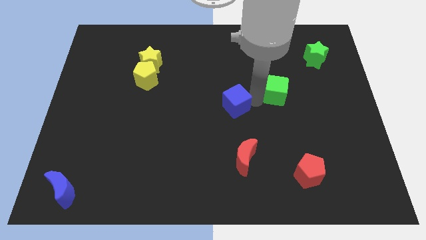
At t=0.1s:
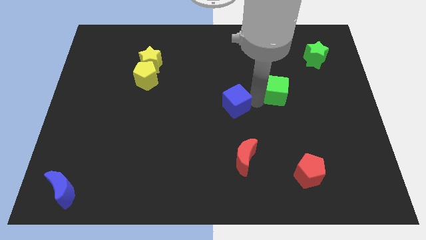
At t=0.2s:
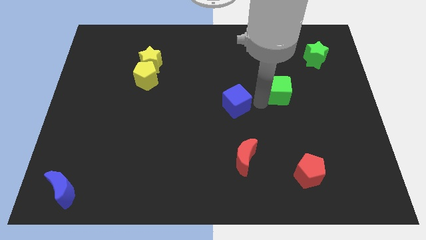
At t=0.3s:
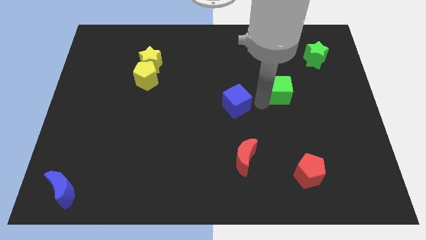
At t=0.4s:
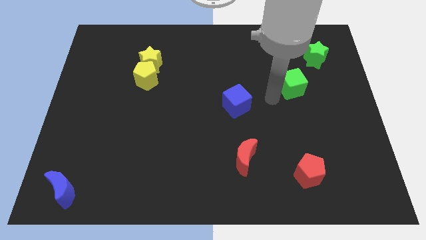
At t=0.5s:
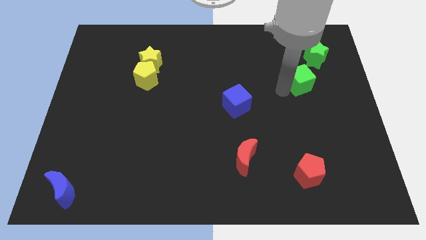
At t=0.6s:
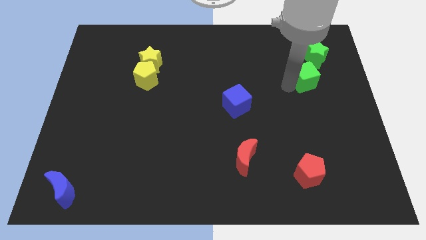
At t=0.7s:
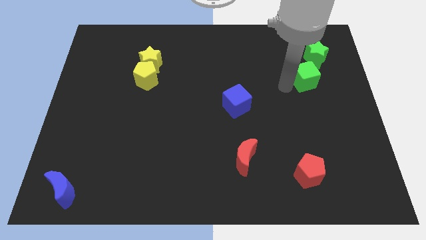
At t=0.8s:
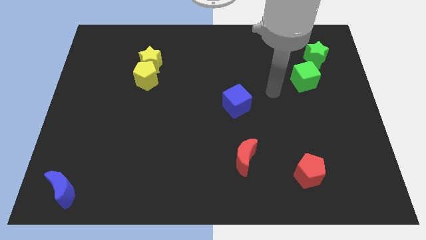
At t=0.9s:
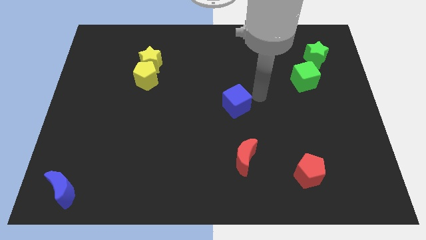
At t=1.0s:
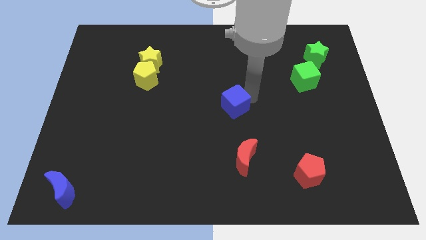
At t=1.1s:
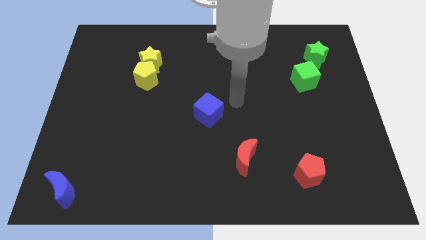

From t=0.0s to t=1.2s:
place green cube to the bottom left of the green star

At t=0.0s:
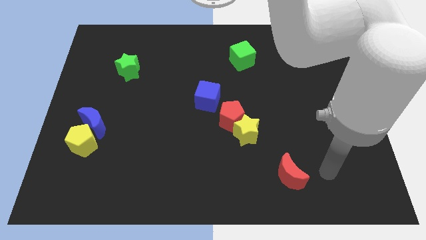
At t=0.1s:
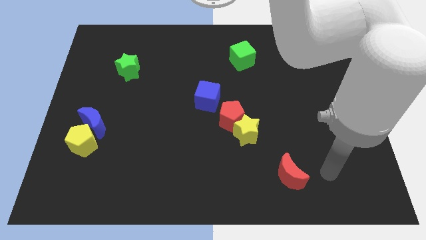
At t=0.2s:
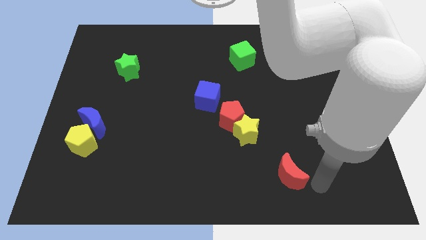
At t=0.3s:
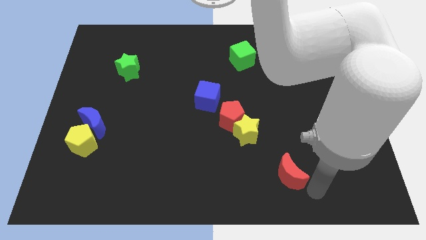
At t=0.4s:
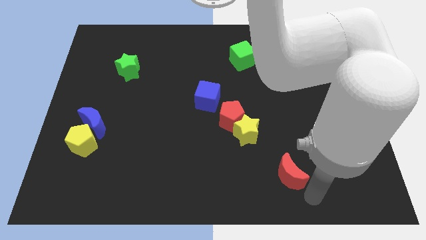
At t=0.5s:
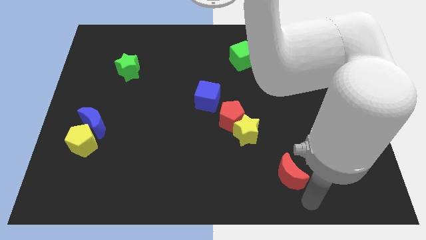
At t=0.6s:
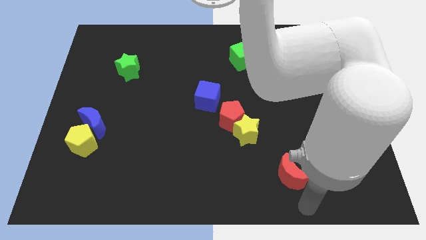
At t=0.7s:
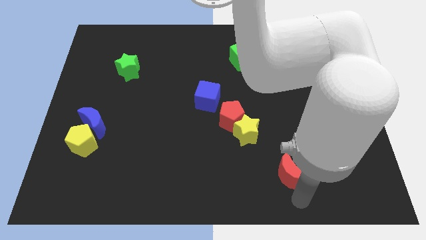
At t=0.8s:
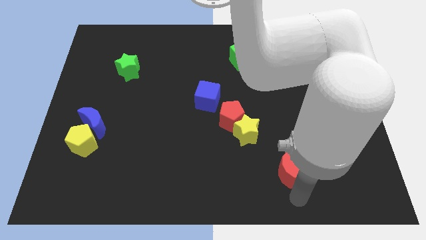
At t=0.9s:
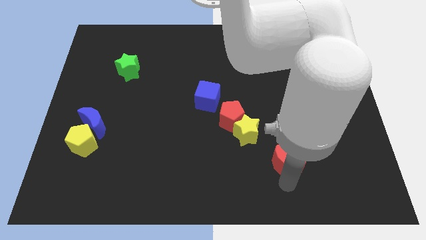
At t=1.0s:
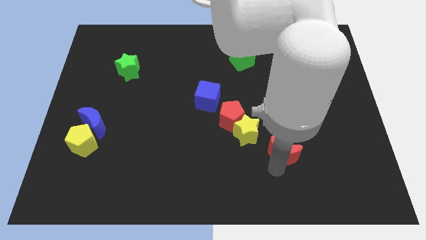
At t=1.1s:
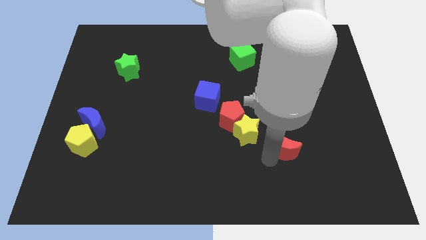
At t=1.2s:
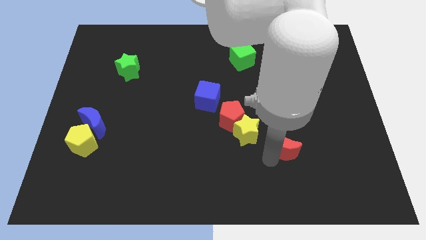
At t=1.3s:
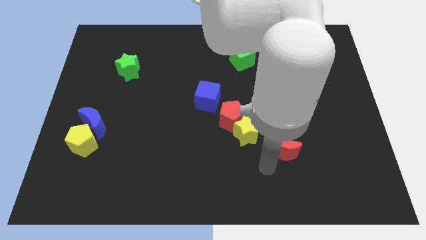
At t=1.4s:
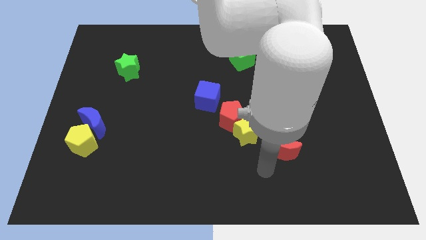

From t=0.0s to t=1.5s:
move the red crescent to the top of the board

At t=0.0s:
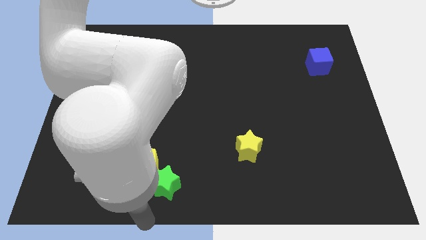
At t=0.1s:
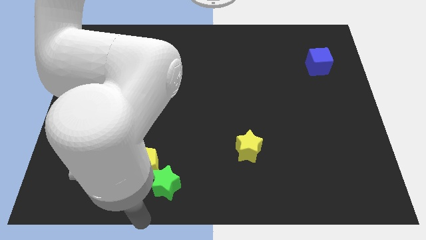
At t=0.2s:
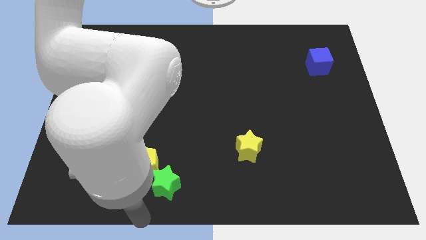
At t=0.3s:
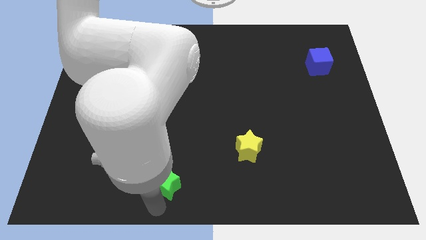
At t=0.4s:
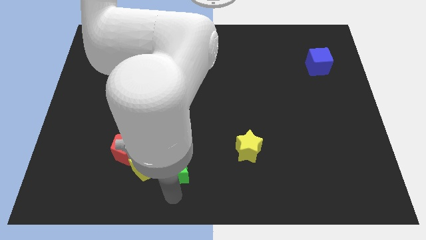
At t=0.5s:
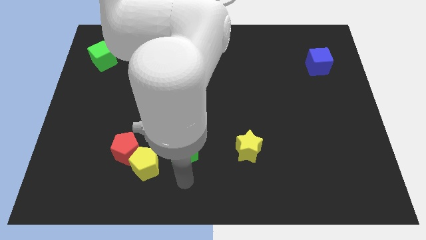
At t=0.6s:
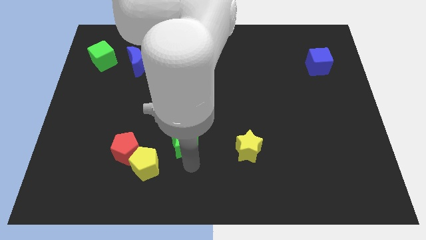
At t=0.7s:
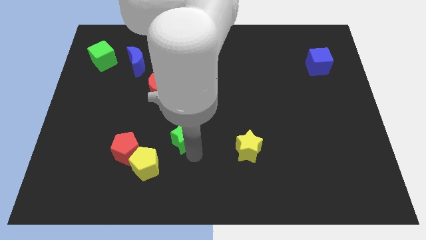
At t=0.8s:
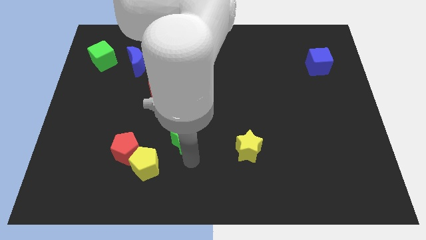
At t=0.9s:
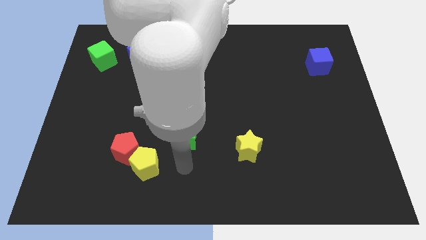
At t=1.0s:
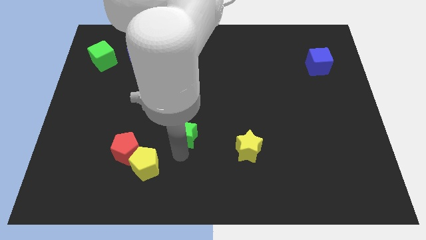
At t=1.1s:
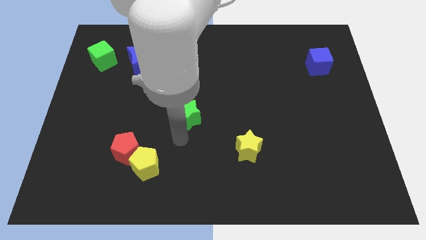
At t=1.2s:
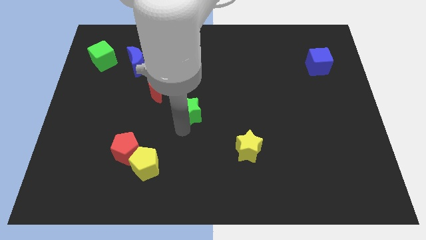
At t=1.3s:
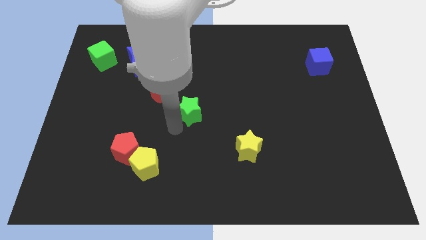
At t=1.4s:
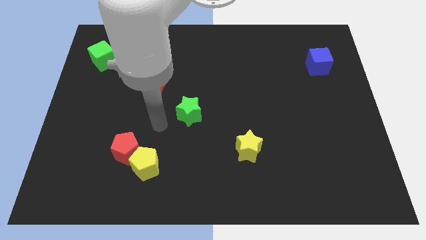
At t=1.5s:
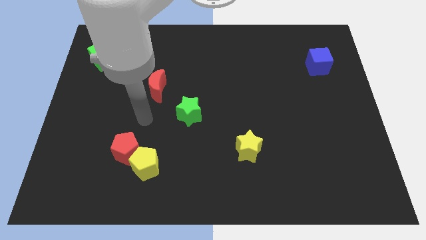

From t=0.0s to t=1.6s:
push the green star towards the center of the board

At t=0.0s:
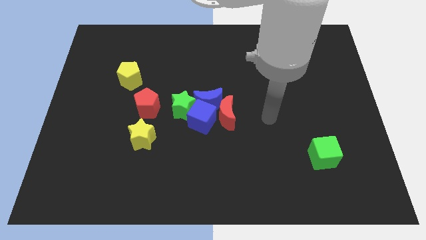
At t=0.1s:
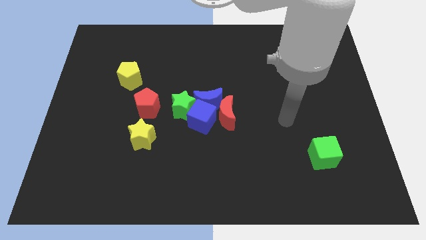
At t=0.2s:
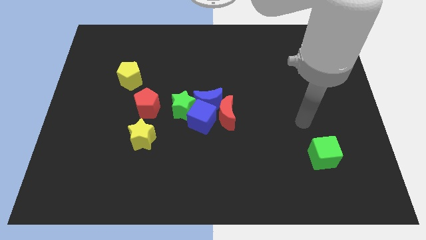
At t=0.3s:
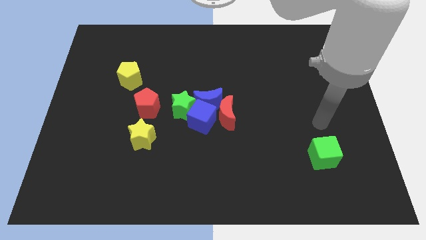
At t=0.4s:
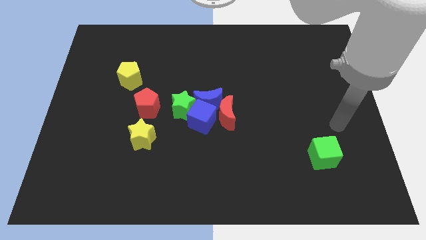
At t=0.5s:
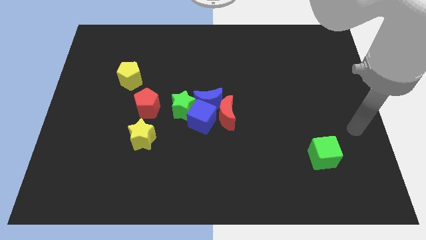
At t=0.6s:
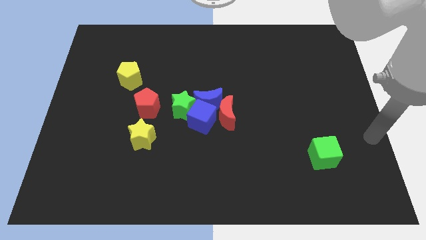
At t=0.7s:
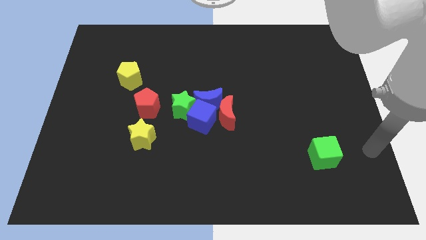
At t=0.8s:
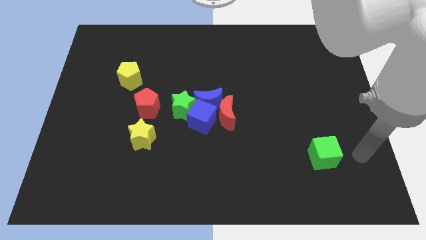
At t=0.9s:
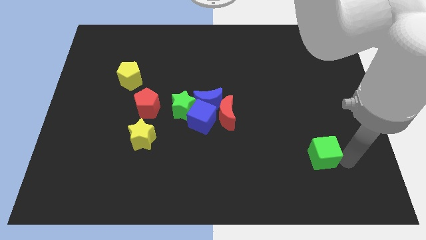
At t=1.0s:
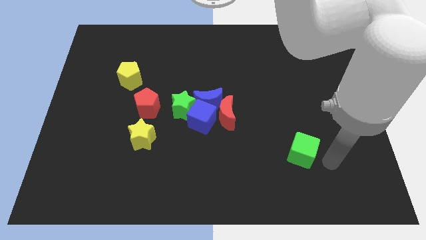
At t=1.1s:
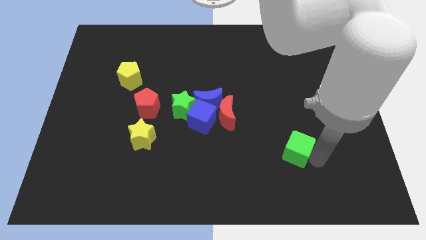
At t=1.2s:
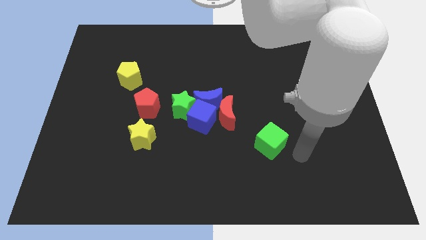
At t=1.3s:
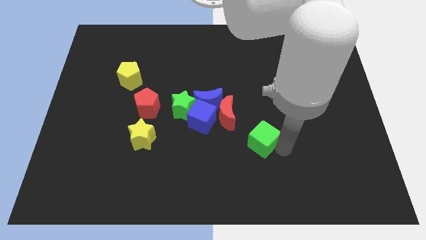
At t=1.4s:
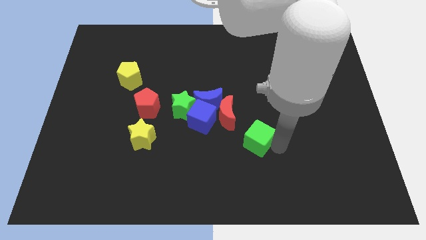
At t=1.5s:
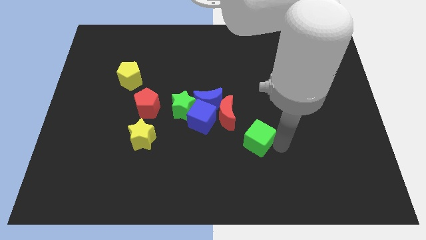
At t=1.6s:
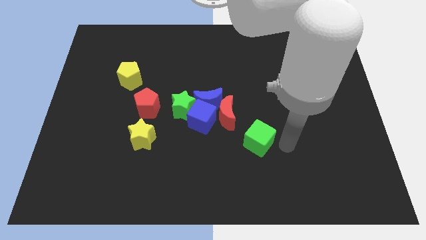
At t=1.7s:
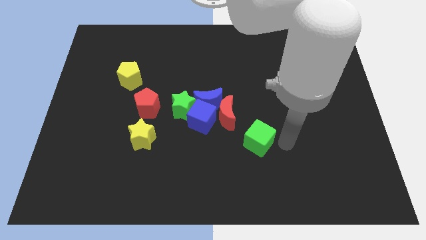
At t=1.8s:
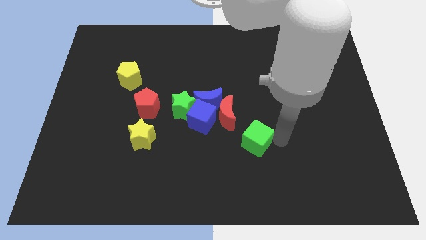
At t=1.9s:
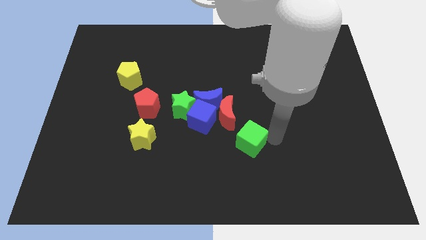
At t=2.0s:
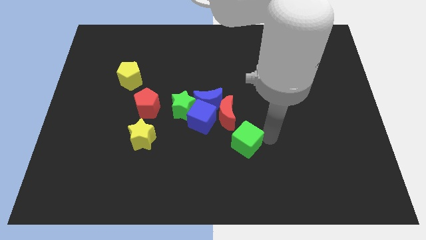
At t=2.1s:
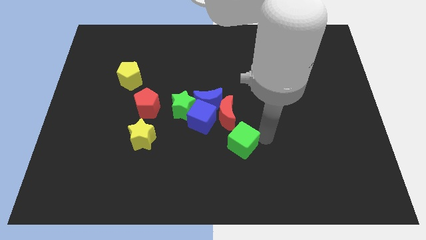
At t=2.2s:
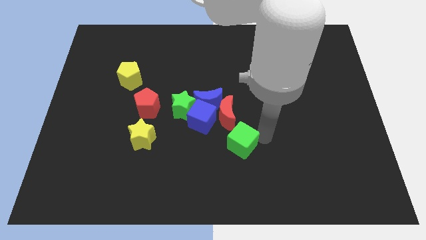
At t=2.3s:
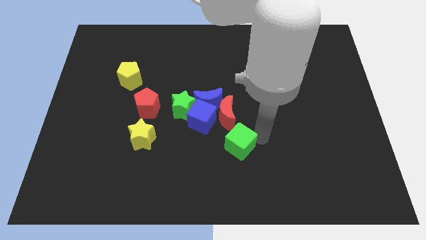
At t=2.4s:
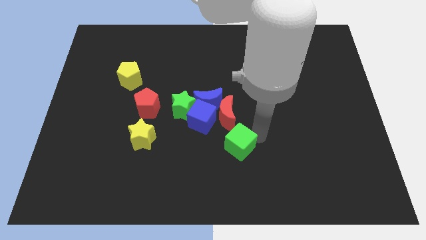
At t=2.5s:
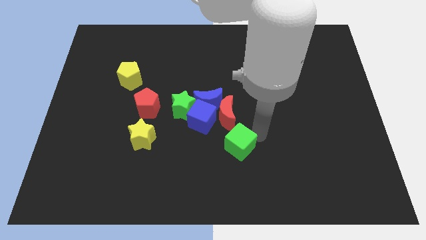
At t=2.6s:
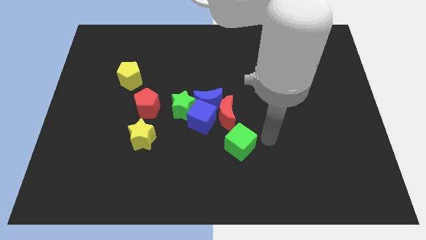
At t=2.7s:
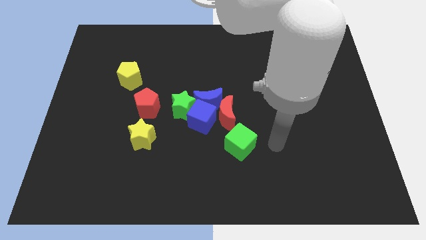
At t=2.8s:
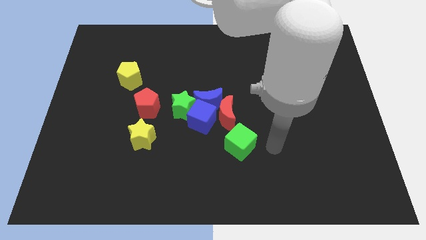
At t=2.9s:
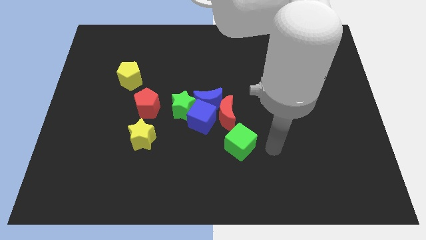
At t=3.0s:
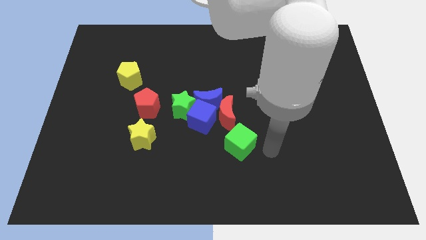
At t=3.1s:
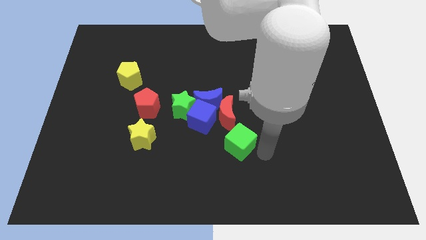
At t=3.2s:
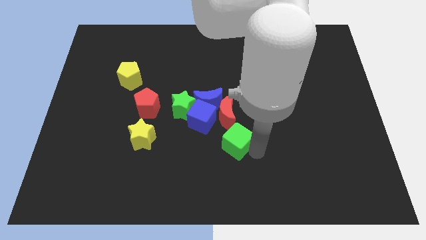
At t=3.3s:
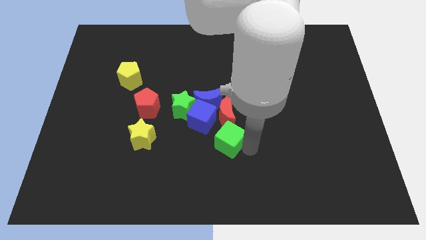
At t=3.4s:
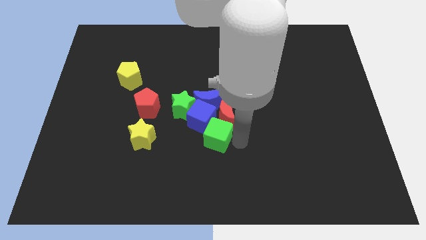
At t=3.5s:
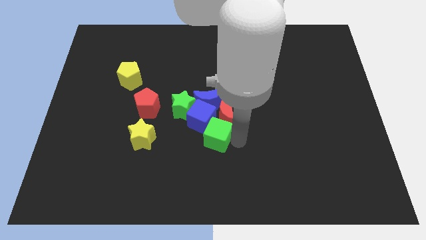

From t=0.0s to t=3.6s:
place the green cube below the red moon

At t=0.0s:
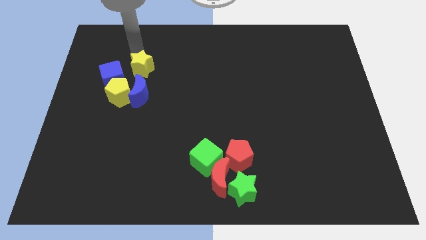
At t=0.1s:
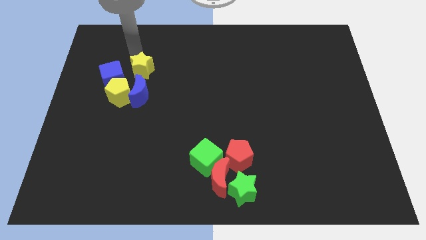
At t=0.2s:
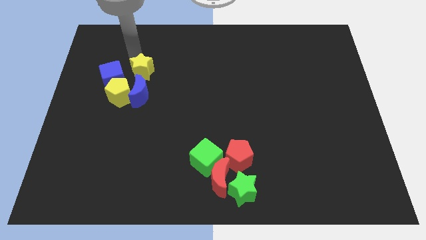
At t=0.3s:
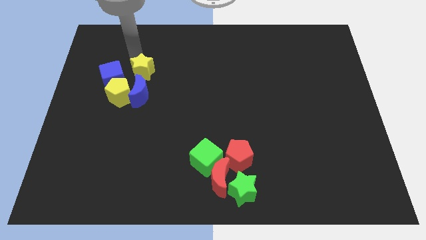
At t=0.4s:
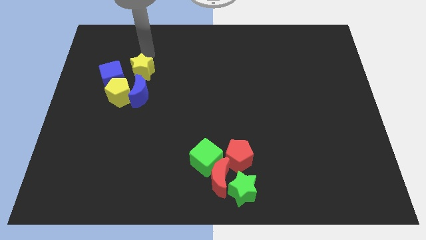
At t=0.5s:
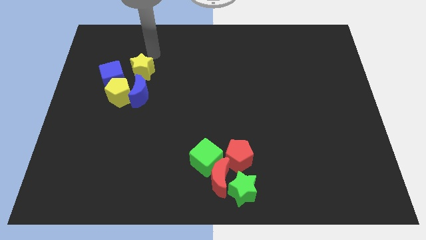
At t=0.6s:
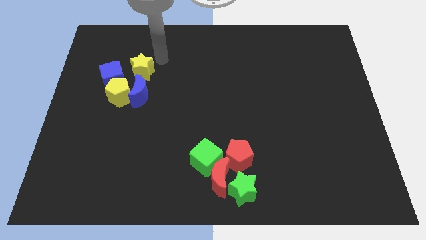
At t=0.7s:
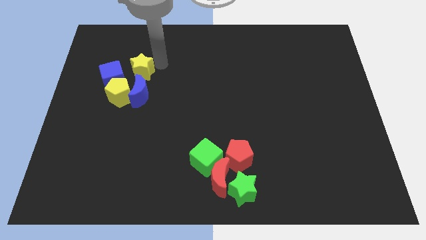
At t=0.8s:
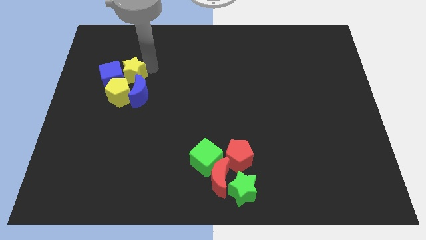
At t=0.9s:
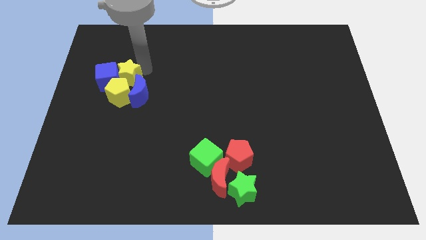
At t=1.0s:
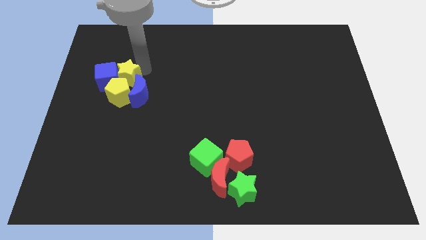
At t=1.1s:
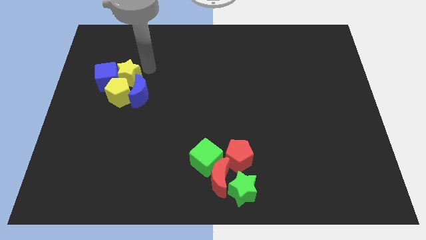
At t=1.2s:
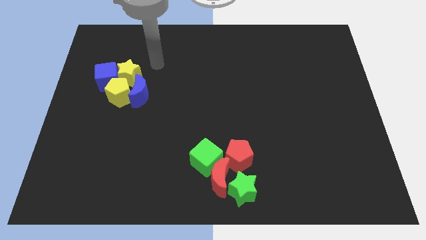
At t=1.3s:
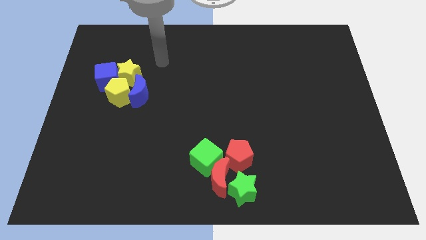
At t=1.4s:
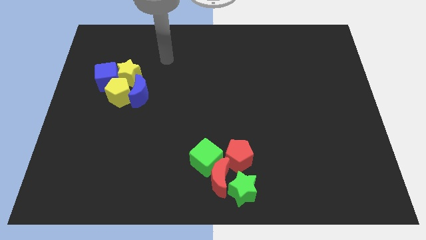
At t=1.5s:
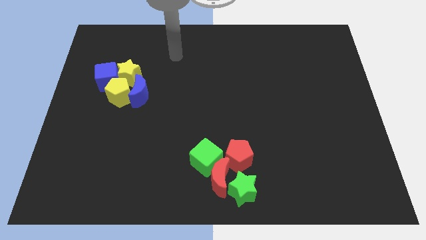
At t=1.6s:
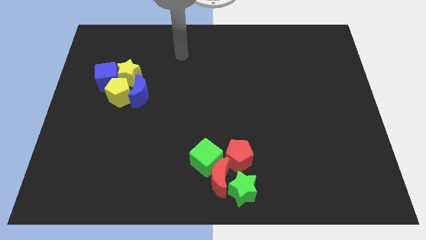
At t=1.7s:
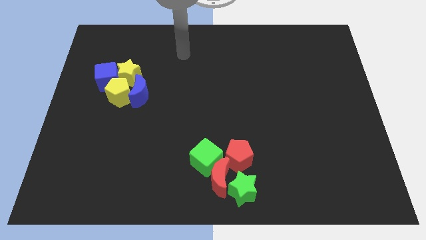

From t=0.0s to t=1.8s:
push the yellow star into the right side of the blue cube
